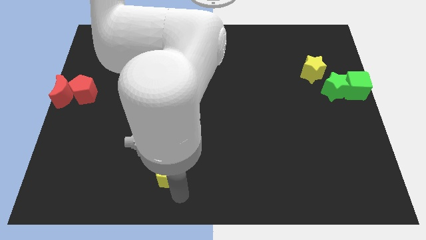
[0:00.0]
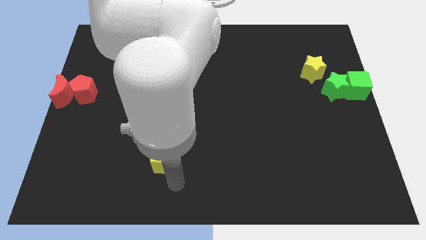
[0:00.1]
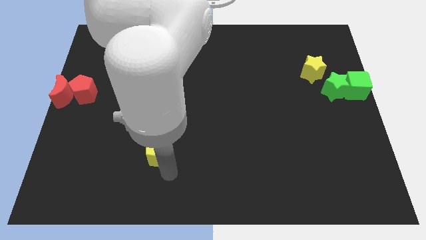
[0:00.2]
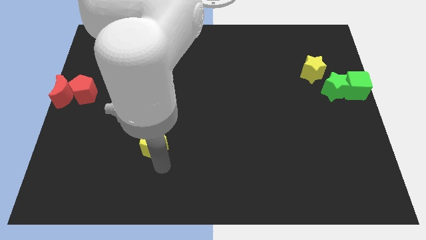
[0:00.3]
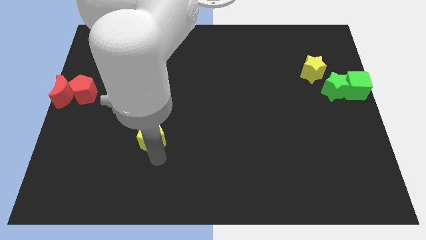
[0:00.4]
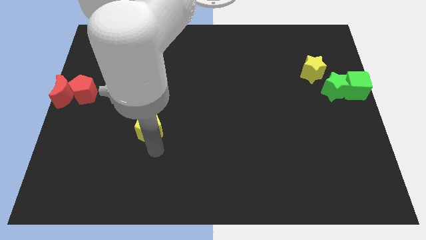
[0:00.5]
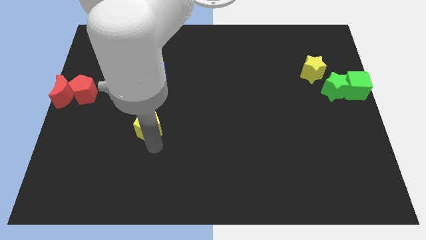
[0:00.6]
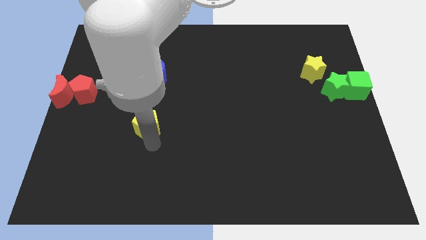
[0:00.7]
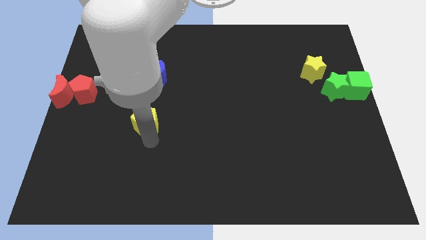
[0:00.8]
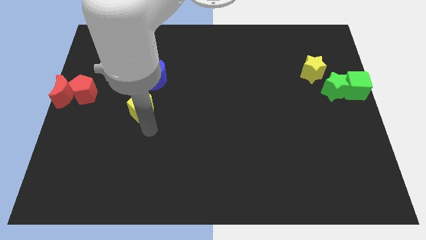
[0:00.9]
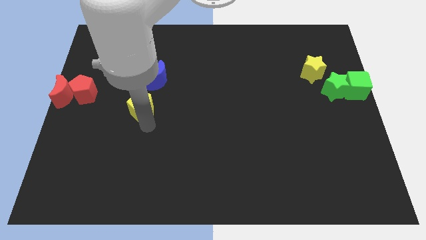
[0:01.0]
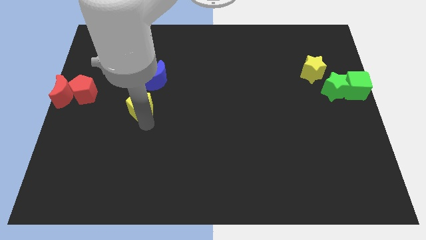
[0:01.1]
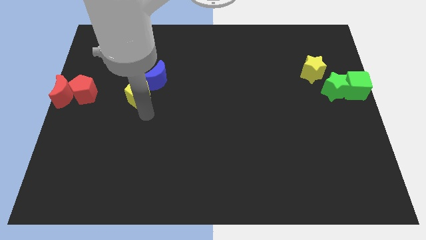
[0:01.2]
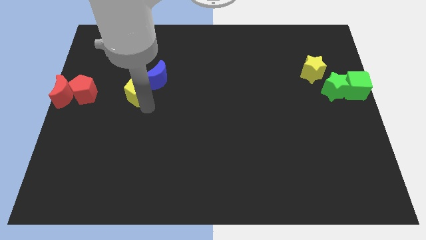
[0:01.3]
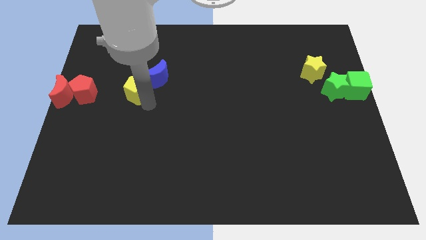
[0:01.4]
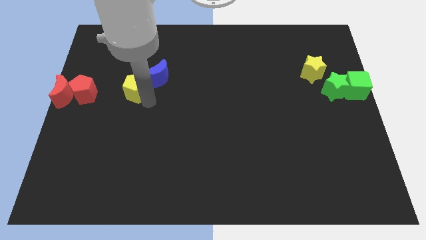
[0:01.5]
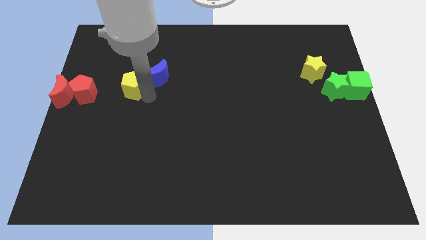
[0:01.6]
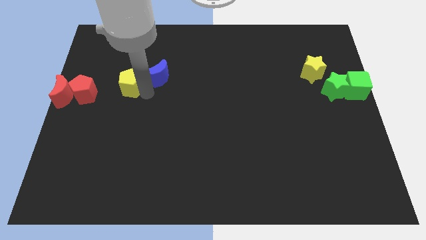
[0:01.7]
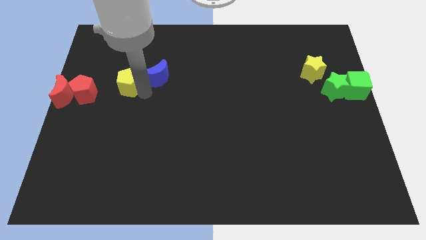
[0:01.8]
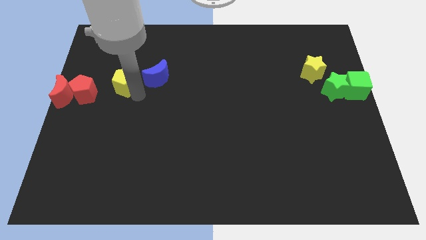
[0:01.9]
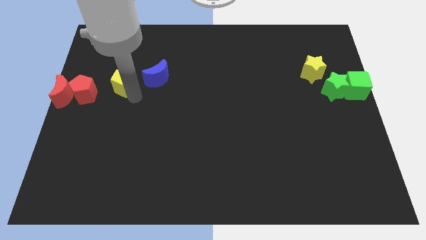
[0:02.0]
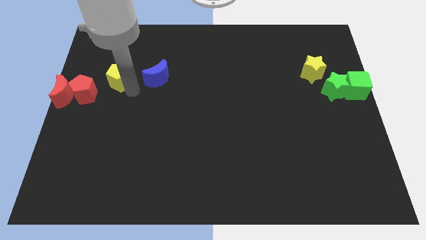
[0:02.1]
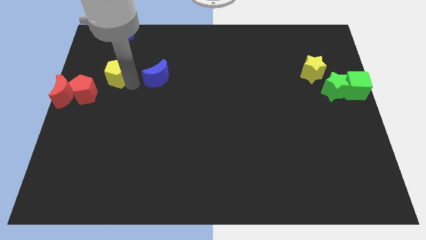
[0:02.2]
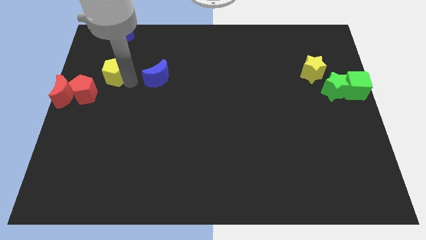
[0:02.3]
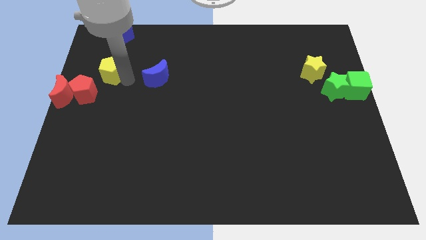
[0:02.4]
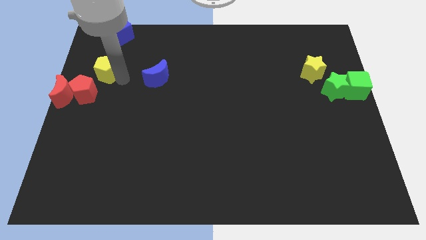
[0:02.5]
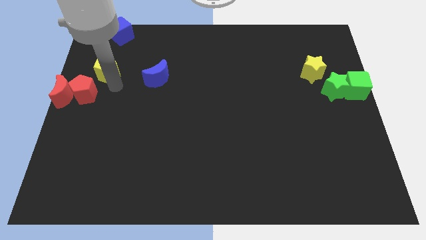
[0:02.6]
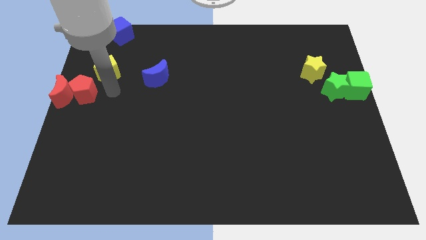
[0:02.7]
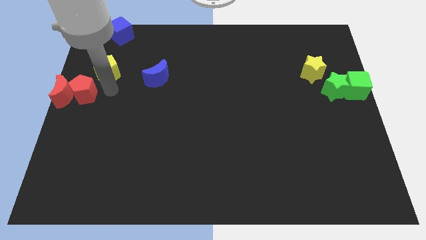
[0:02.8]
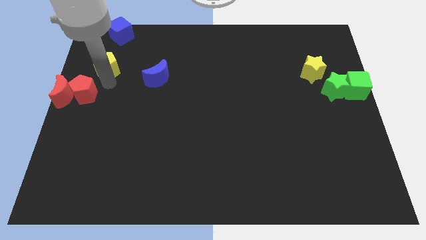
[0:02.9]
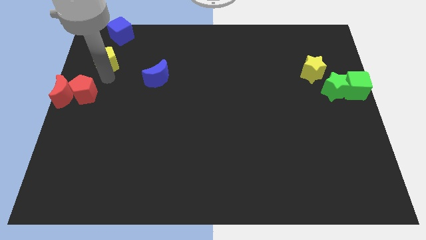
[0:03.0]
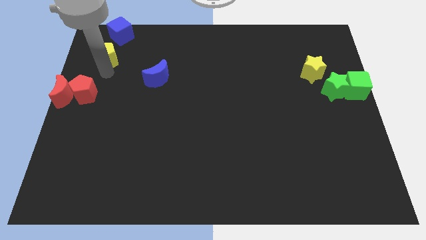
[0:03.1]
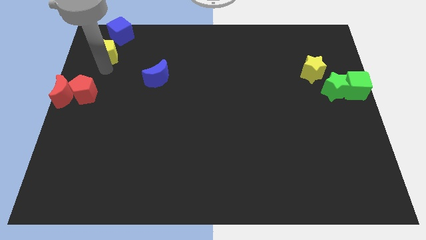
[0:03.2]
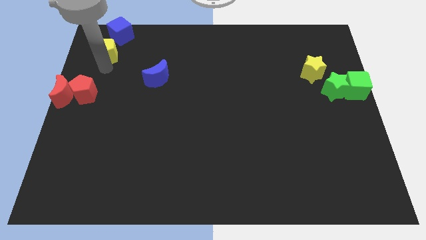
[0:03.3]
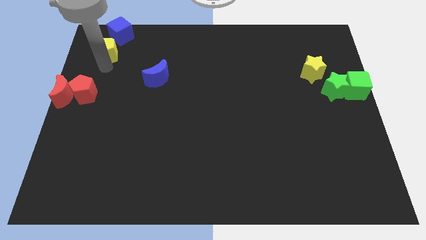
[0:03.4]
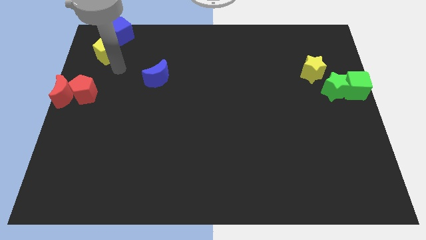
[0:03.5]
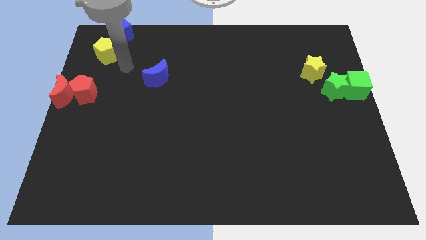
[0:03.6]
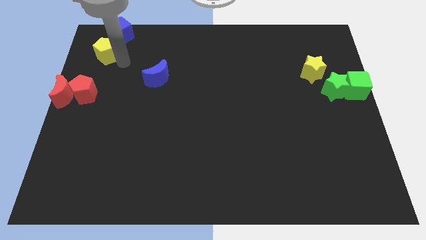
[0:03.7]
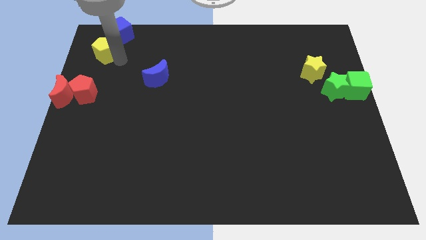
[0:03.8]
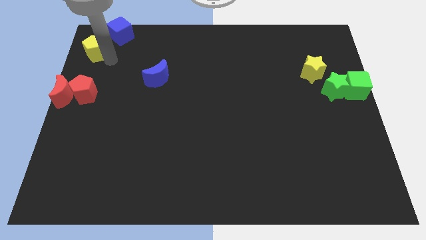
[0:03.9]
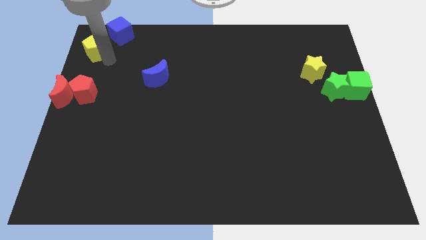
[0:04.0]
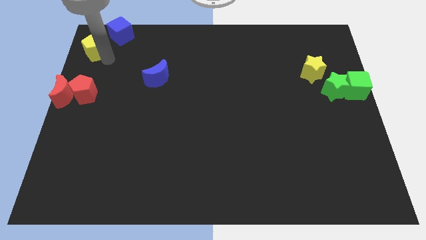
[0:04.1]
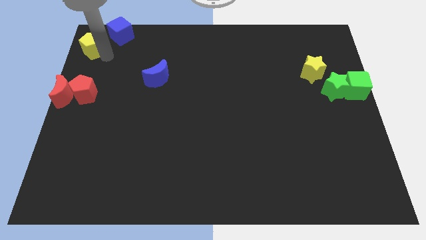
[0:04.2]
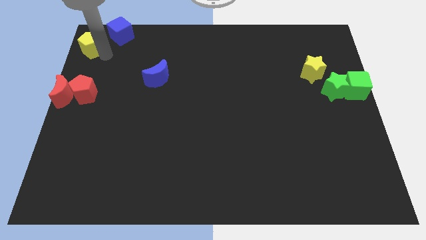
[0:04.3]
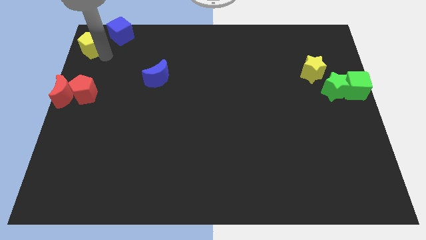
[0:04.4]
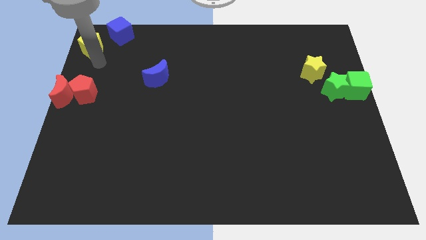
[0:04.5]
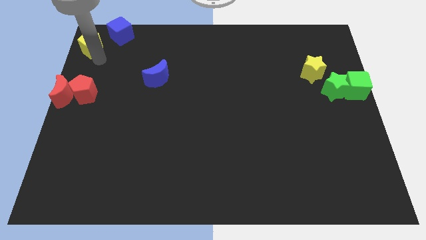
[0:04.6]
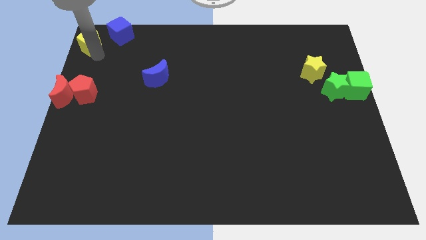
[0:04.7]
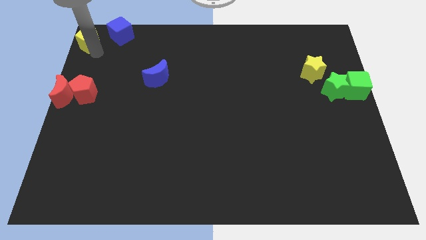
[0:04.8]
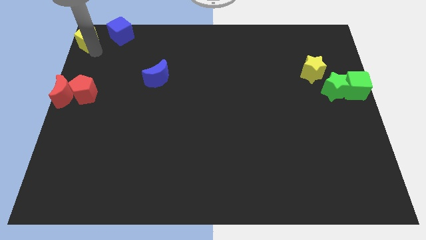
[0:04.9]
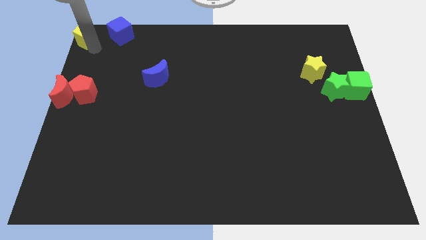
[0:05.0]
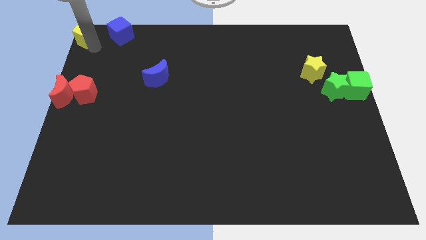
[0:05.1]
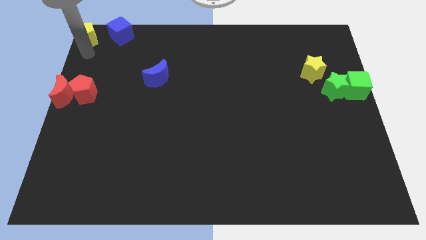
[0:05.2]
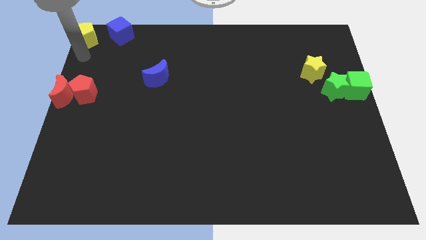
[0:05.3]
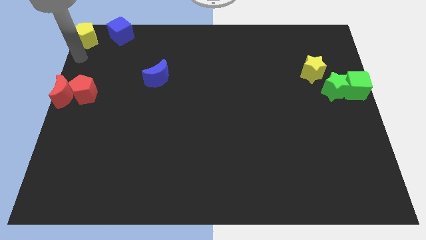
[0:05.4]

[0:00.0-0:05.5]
drag the yellow pentagon to the top left

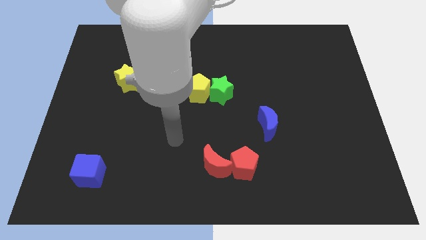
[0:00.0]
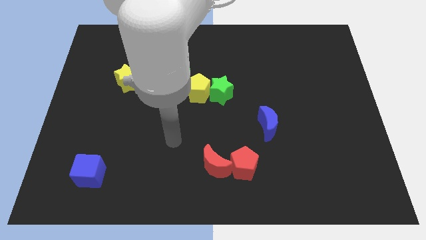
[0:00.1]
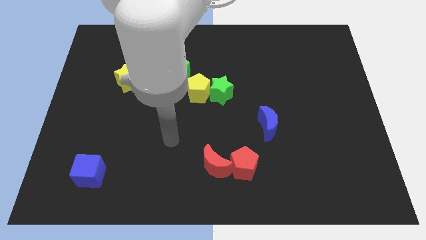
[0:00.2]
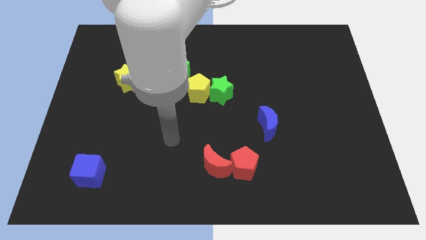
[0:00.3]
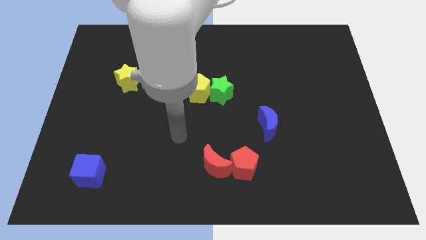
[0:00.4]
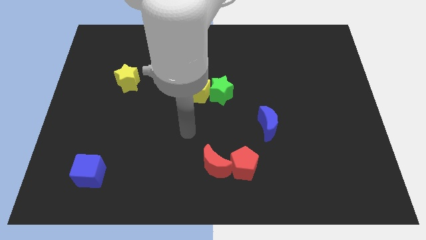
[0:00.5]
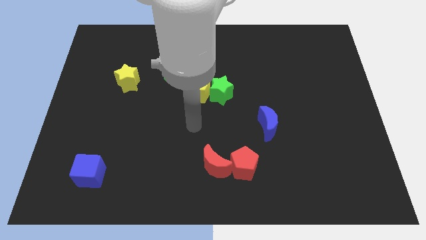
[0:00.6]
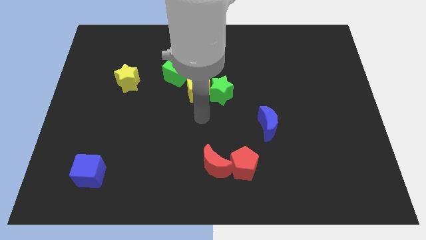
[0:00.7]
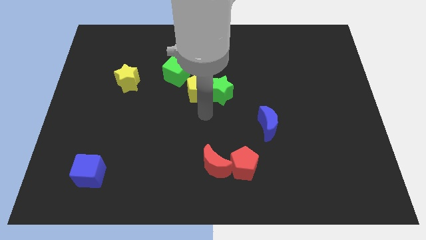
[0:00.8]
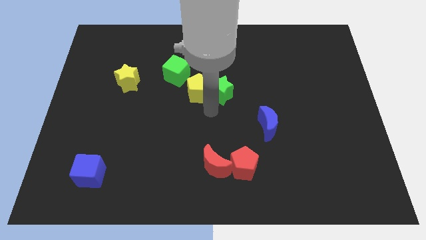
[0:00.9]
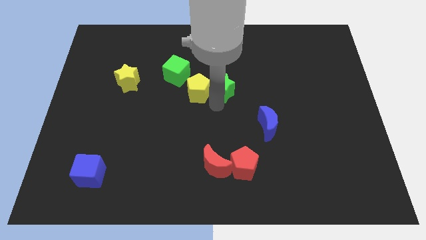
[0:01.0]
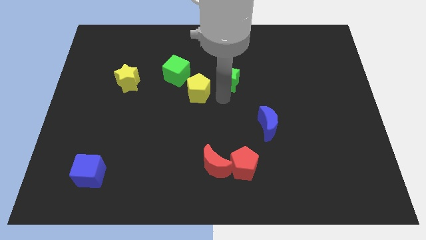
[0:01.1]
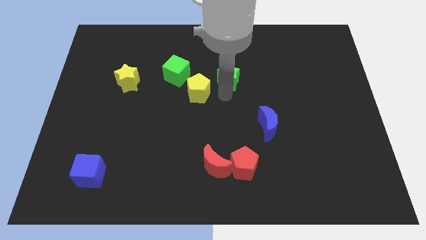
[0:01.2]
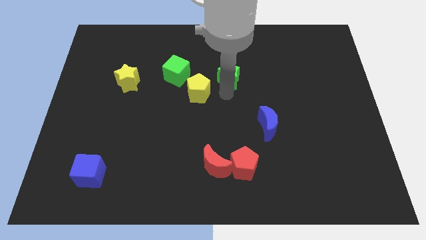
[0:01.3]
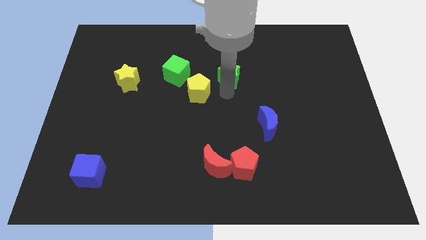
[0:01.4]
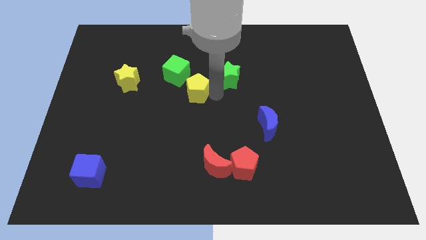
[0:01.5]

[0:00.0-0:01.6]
push green star

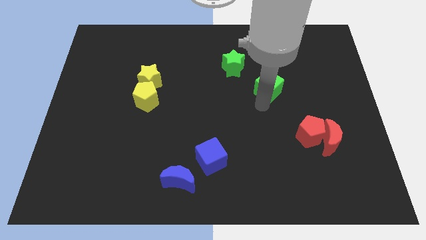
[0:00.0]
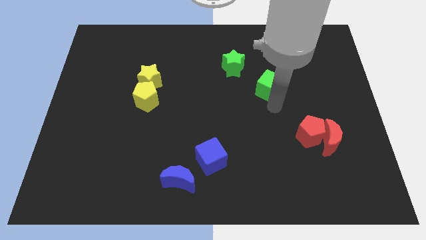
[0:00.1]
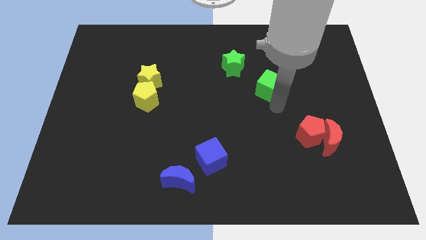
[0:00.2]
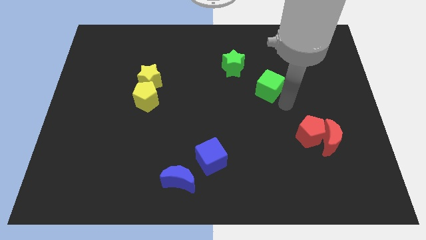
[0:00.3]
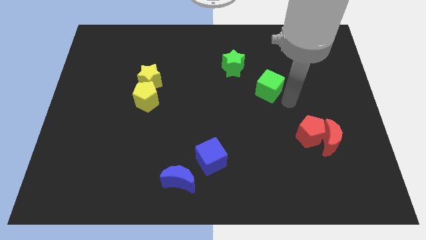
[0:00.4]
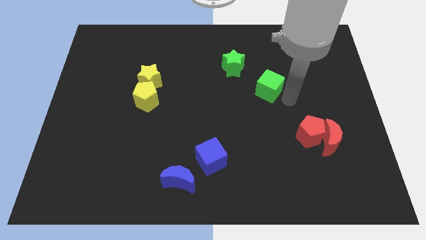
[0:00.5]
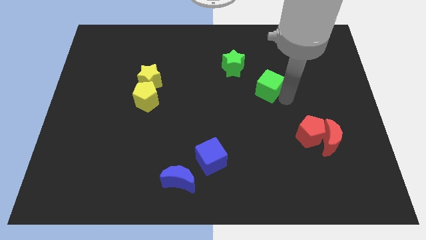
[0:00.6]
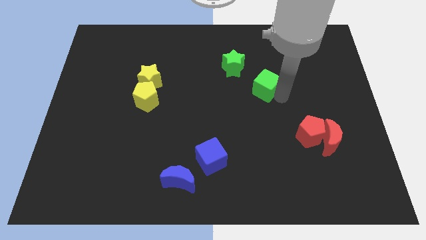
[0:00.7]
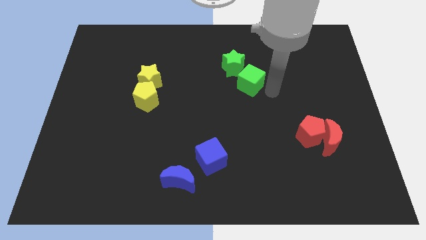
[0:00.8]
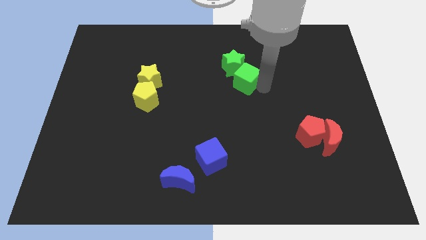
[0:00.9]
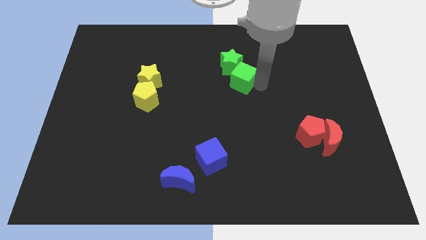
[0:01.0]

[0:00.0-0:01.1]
push the green cube into the green star

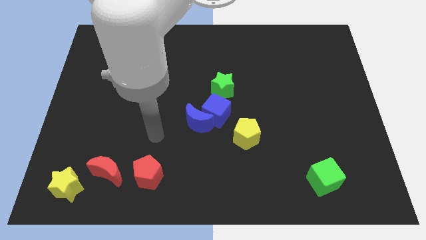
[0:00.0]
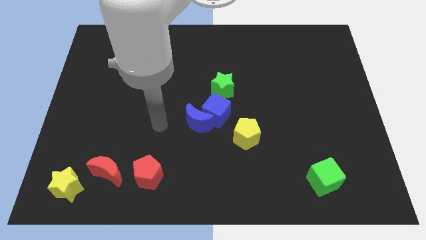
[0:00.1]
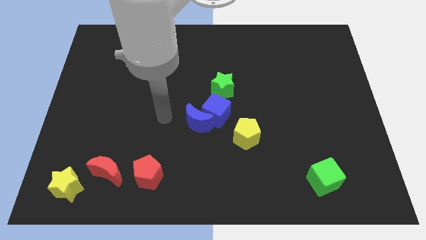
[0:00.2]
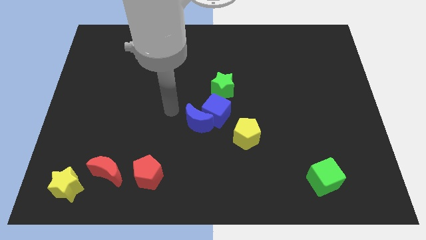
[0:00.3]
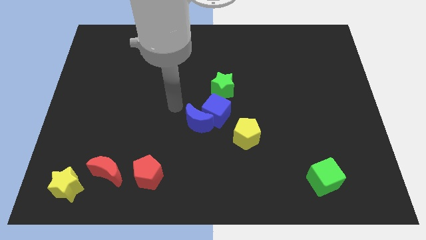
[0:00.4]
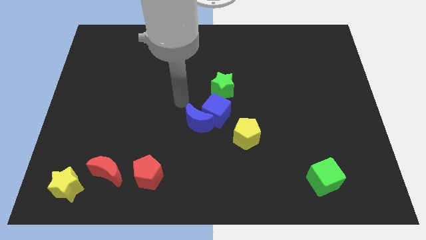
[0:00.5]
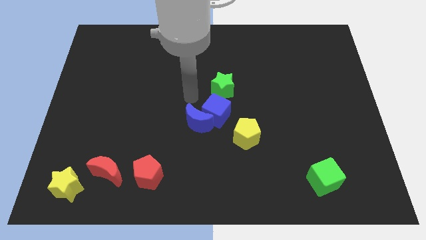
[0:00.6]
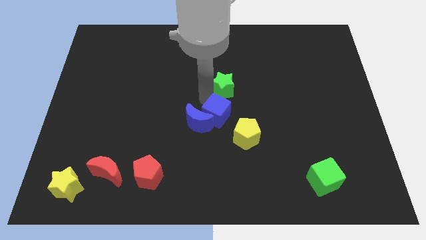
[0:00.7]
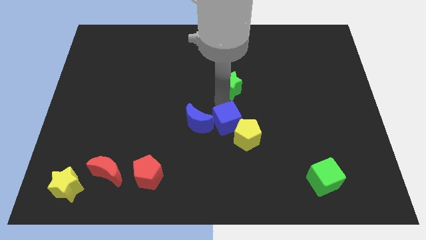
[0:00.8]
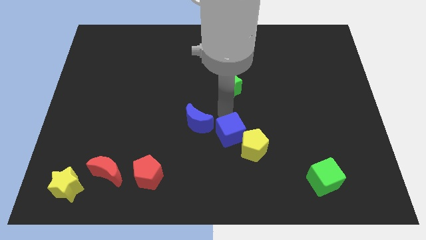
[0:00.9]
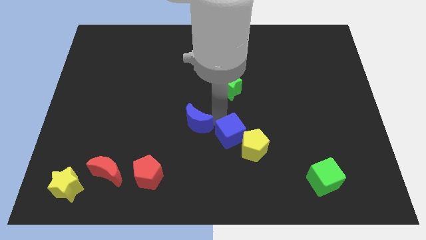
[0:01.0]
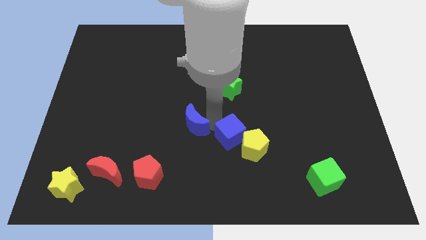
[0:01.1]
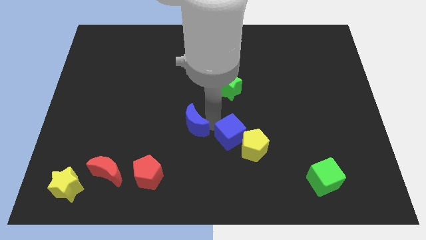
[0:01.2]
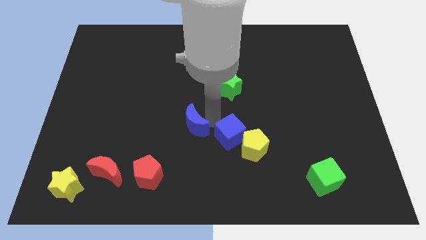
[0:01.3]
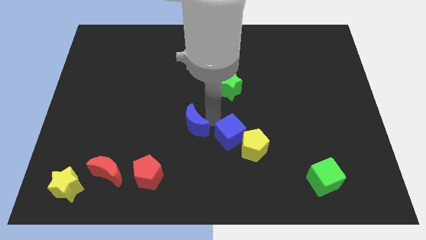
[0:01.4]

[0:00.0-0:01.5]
separate the blue moon from blue cube
